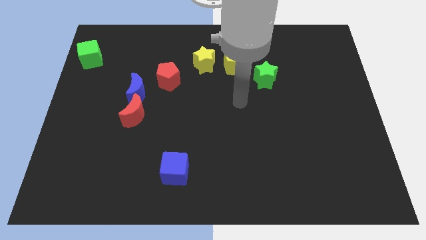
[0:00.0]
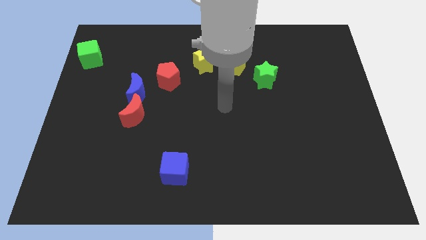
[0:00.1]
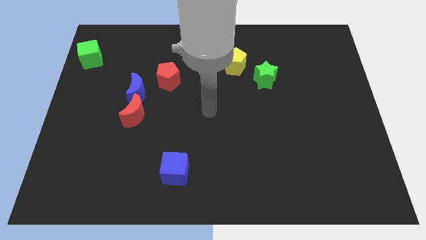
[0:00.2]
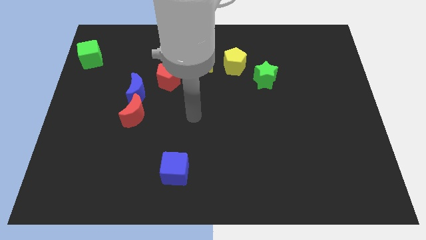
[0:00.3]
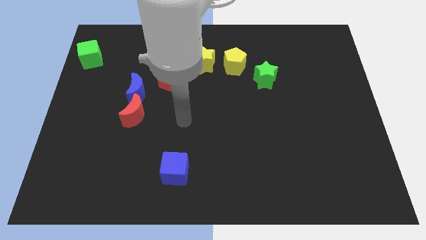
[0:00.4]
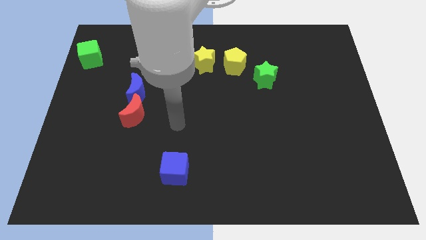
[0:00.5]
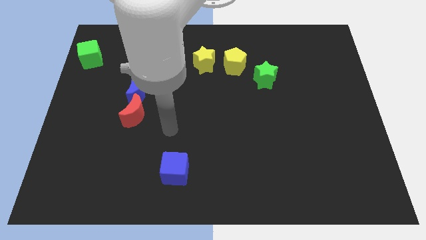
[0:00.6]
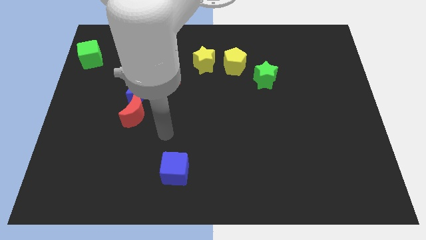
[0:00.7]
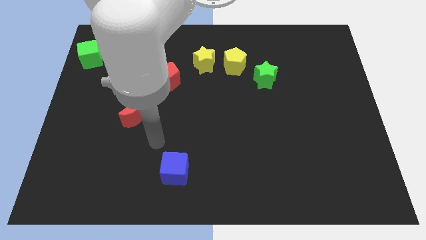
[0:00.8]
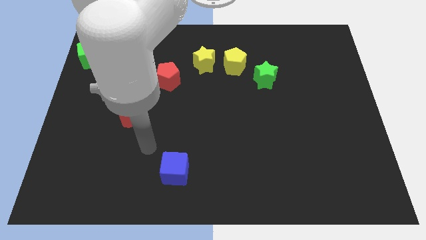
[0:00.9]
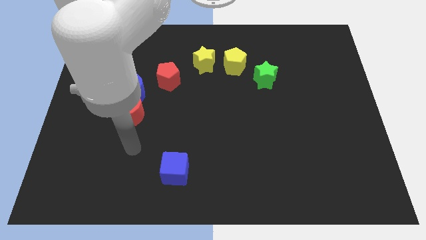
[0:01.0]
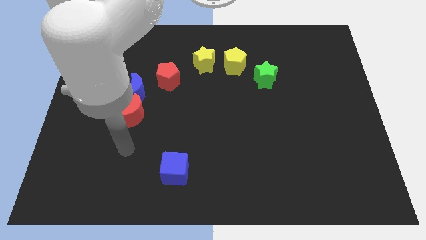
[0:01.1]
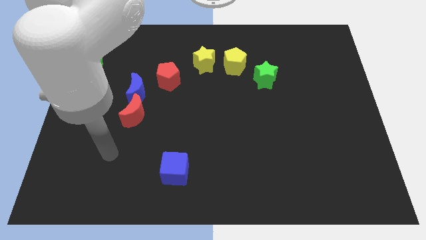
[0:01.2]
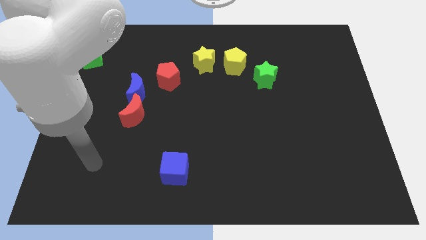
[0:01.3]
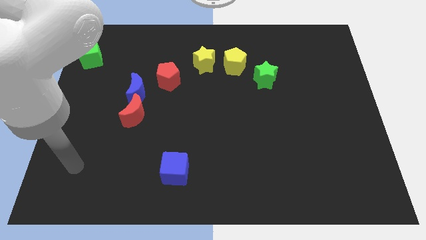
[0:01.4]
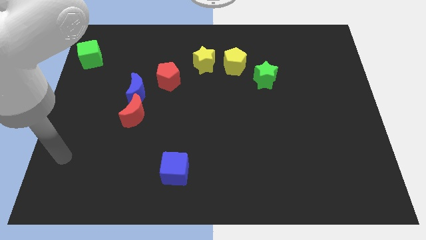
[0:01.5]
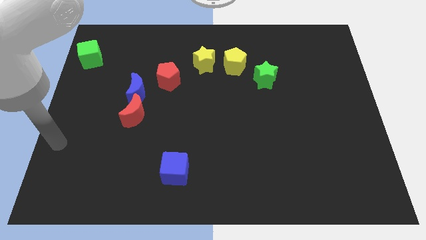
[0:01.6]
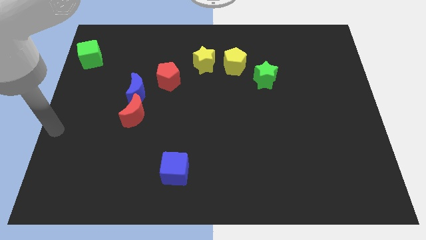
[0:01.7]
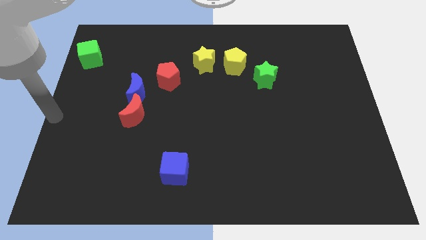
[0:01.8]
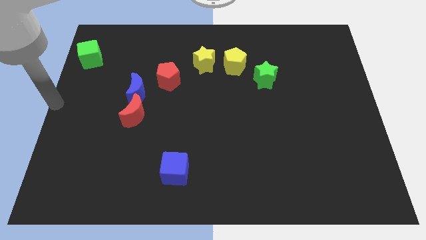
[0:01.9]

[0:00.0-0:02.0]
point your arm at the center left of the board

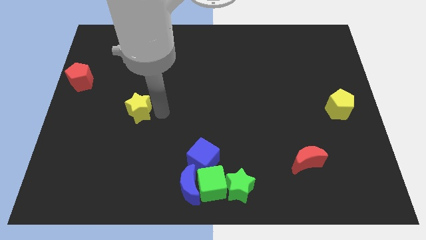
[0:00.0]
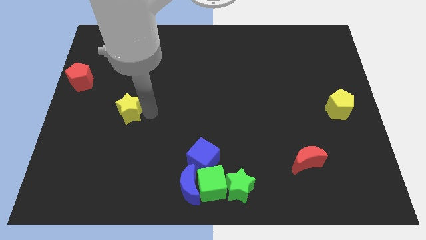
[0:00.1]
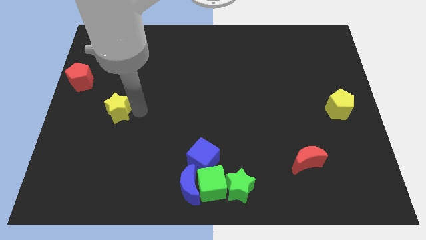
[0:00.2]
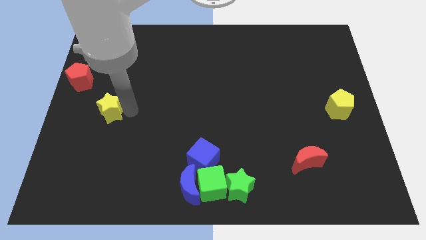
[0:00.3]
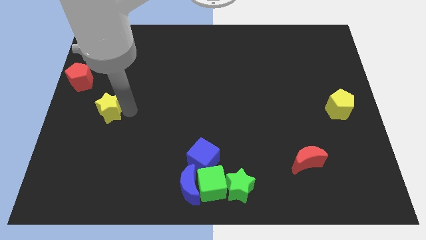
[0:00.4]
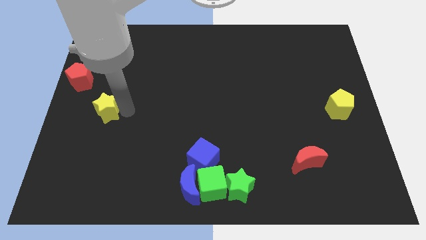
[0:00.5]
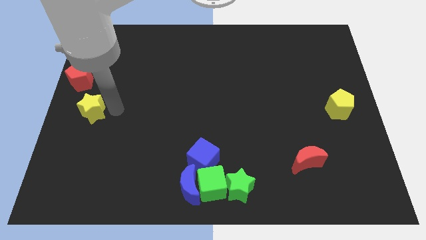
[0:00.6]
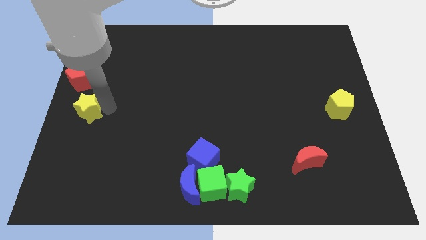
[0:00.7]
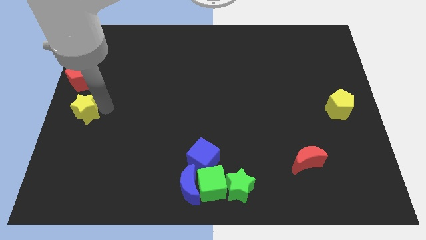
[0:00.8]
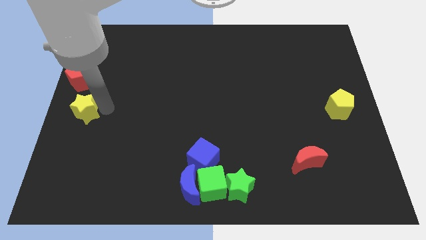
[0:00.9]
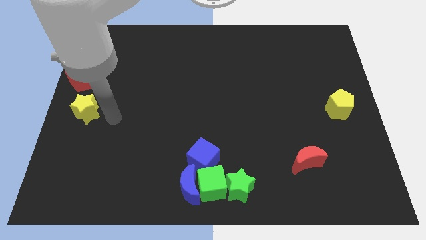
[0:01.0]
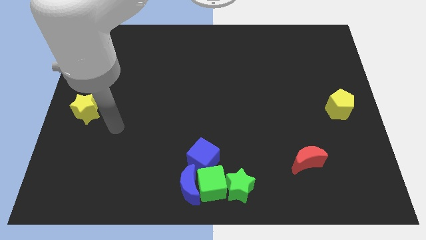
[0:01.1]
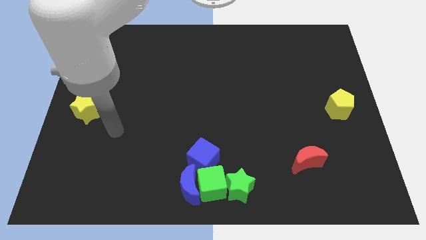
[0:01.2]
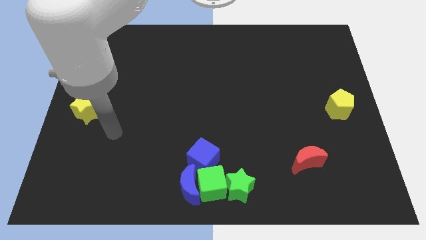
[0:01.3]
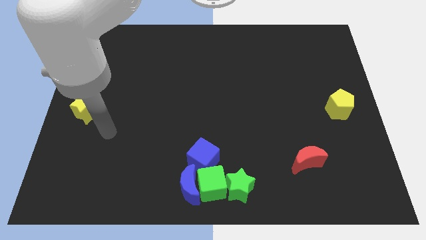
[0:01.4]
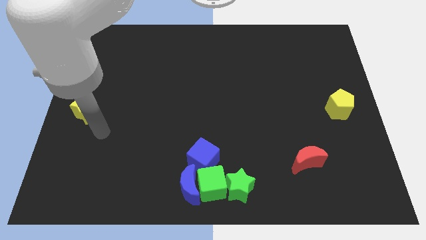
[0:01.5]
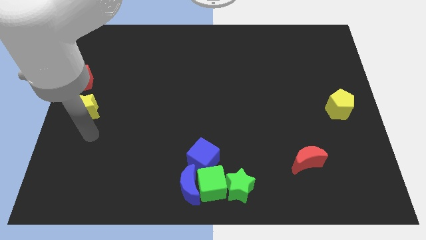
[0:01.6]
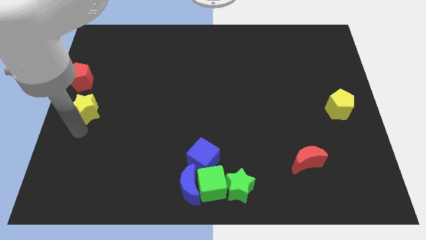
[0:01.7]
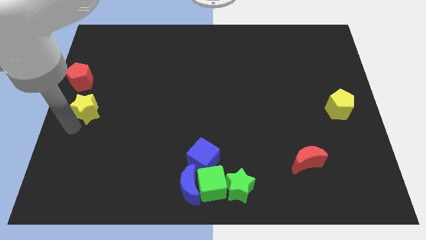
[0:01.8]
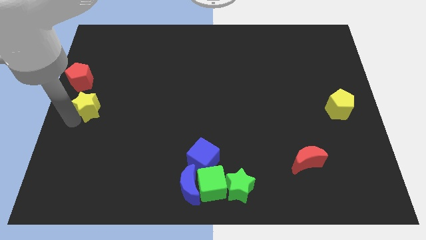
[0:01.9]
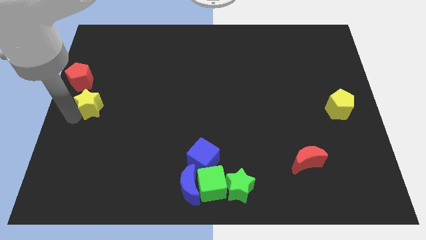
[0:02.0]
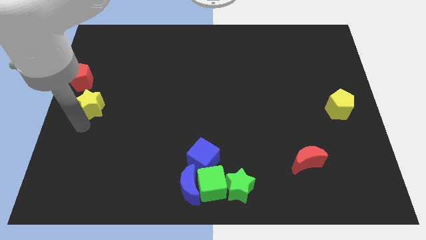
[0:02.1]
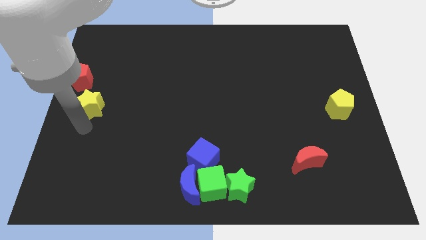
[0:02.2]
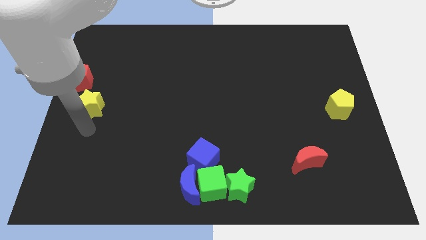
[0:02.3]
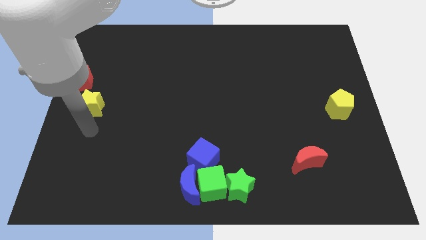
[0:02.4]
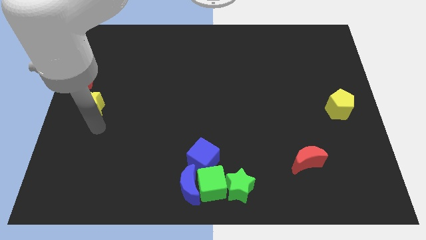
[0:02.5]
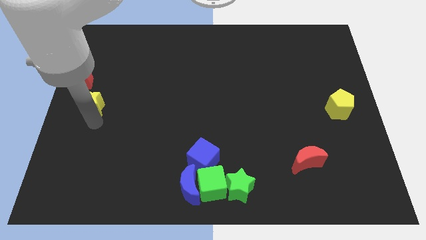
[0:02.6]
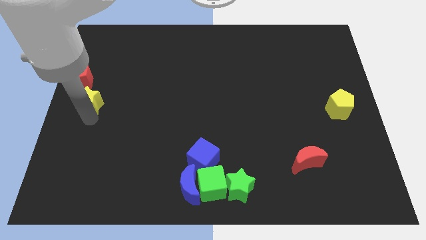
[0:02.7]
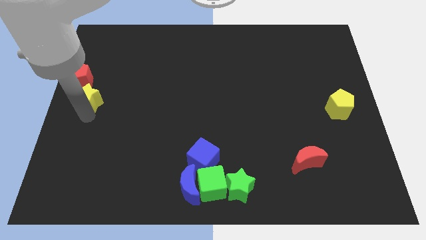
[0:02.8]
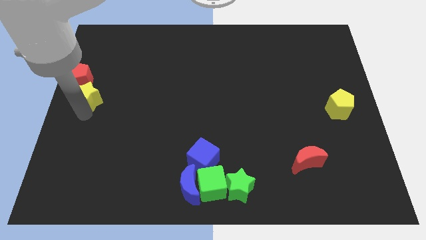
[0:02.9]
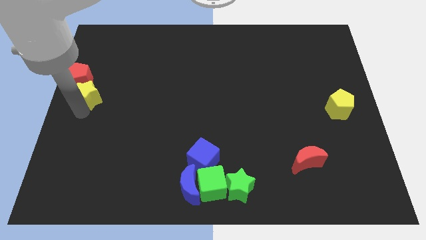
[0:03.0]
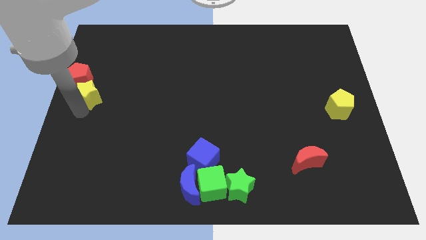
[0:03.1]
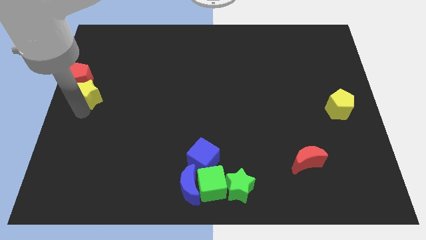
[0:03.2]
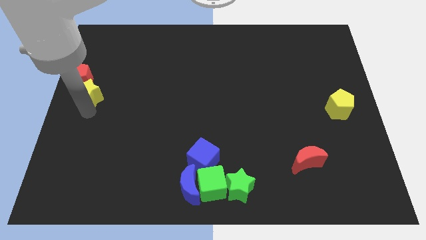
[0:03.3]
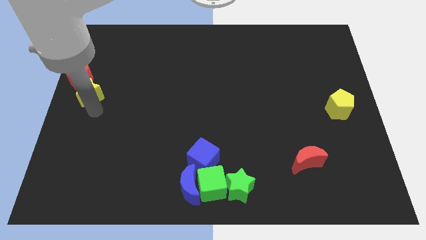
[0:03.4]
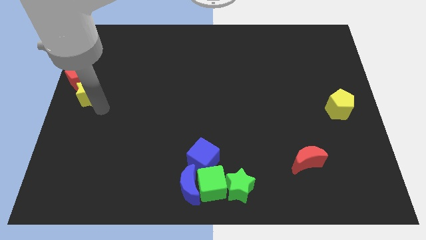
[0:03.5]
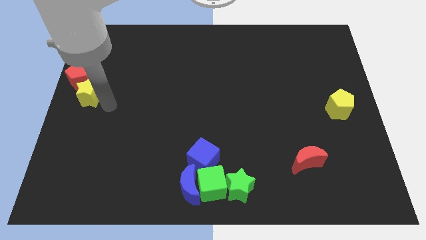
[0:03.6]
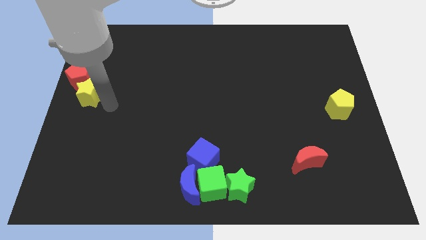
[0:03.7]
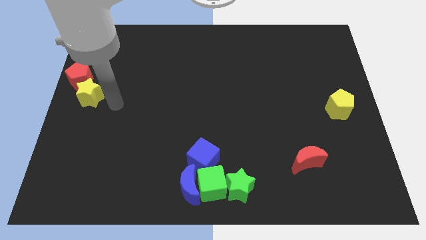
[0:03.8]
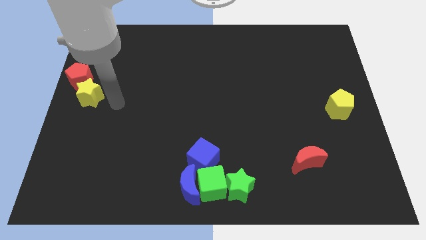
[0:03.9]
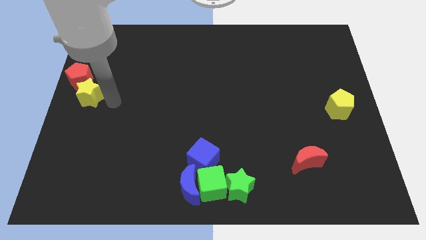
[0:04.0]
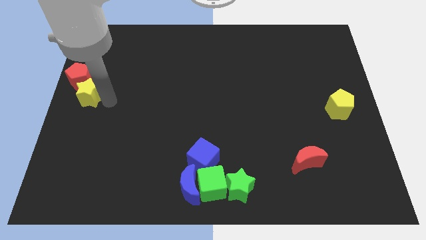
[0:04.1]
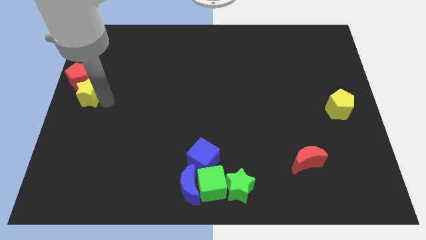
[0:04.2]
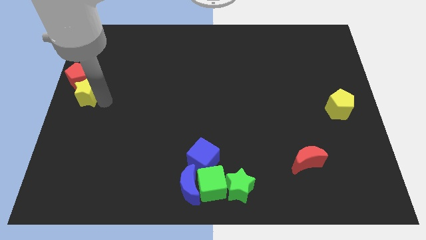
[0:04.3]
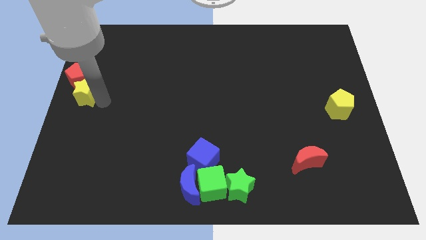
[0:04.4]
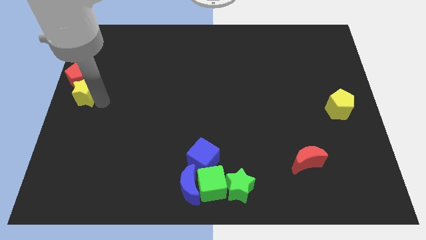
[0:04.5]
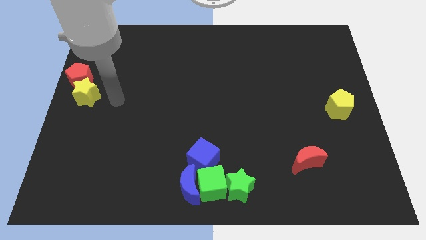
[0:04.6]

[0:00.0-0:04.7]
push the yellow star into the red pentagon

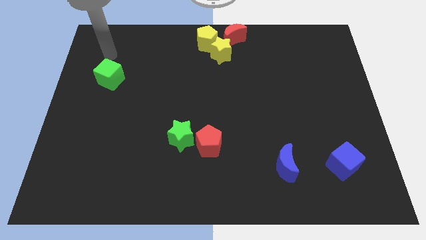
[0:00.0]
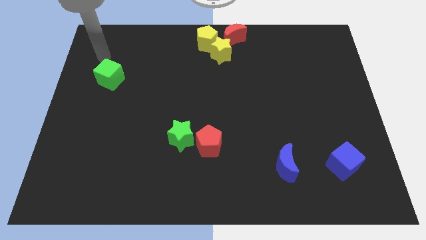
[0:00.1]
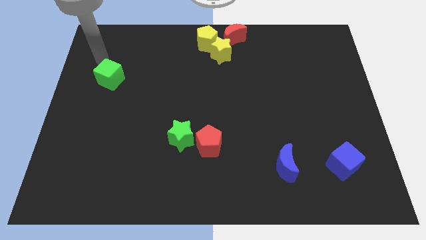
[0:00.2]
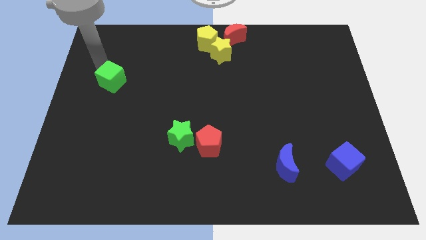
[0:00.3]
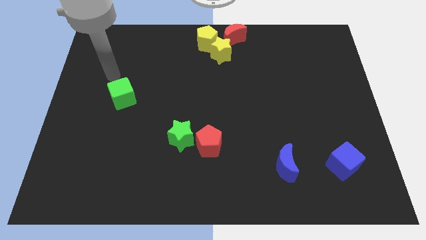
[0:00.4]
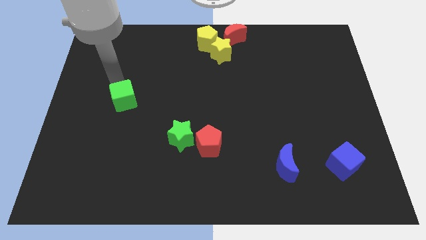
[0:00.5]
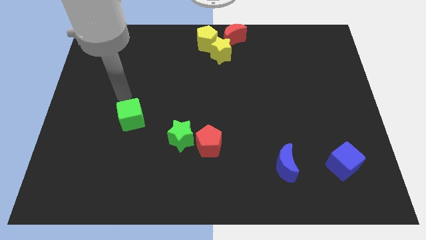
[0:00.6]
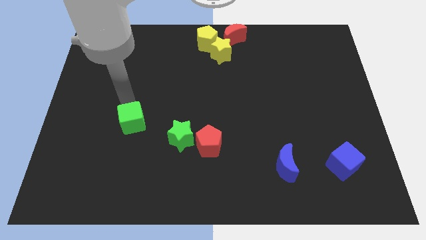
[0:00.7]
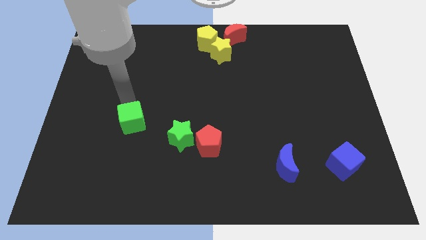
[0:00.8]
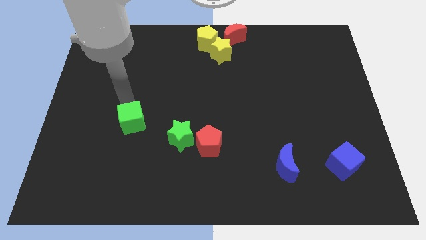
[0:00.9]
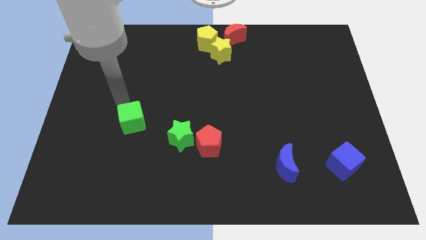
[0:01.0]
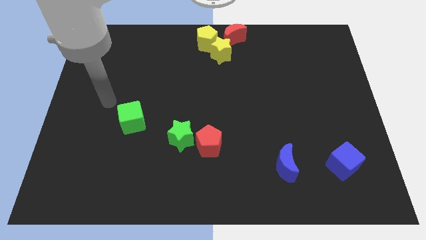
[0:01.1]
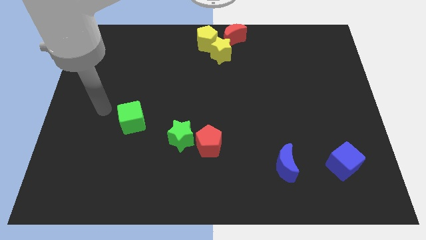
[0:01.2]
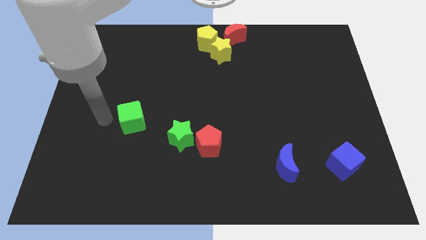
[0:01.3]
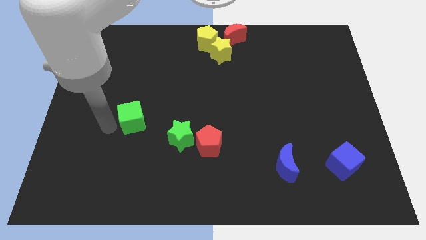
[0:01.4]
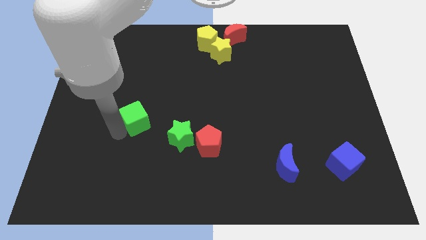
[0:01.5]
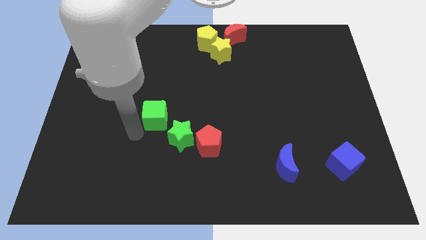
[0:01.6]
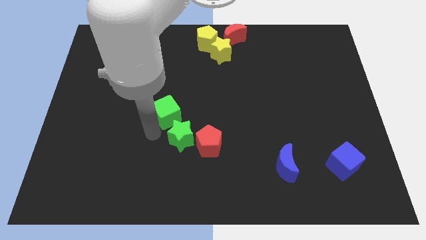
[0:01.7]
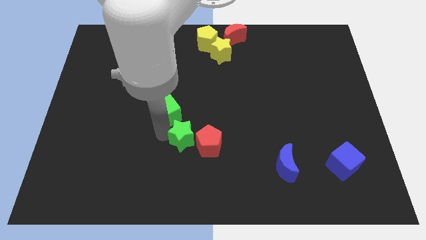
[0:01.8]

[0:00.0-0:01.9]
place the green cube at the top left side of green star

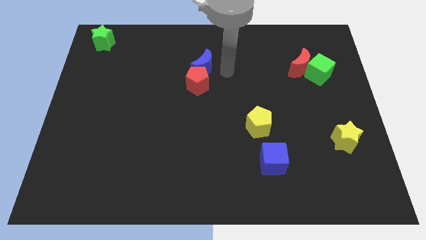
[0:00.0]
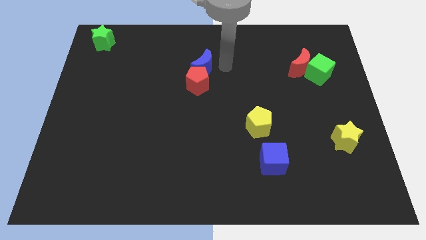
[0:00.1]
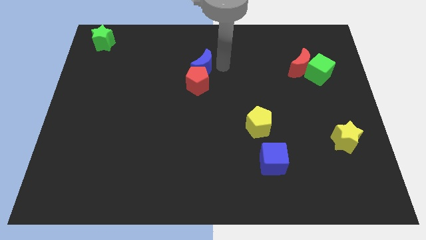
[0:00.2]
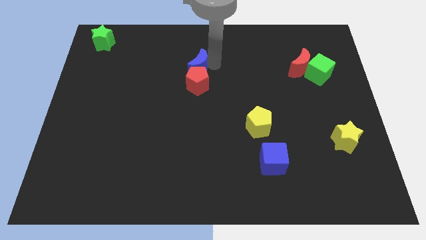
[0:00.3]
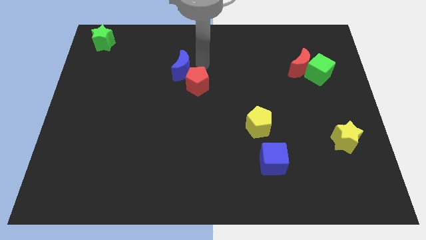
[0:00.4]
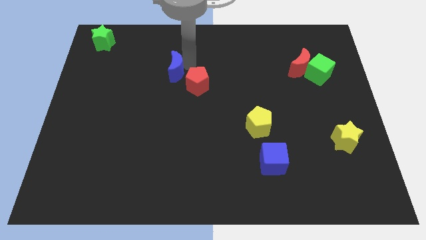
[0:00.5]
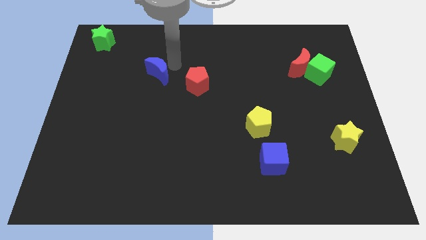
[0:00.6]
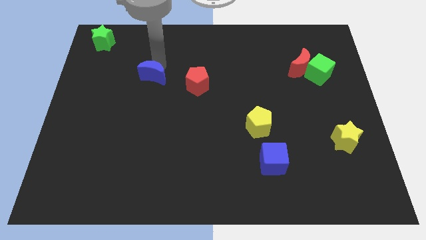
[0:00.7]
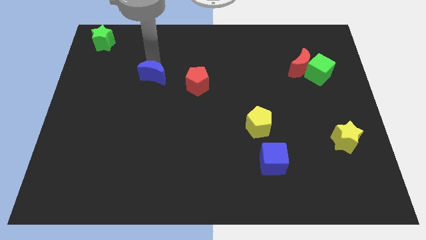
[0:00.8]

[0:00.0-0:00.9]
push the blue crescent to the left side of the red pentagon
